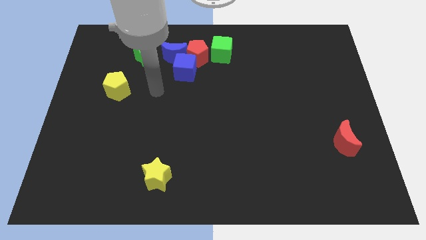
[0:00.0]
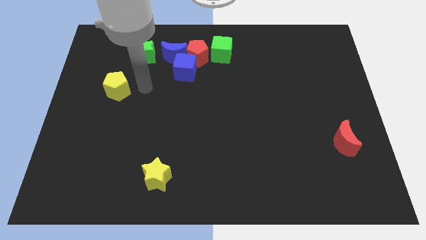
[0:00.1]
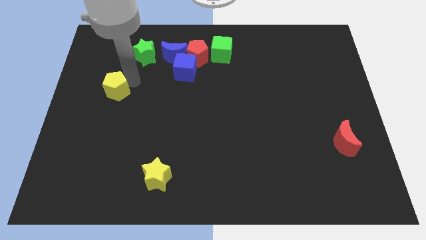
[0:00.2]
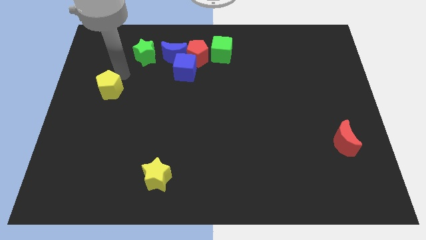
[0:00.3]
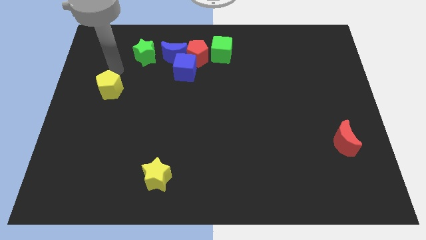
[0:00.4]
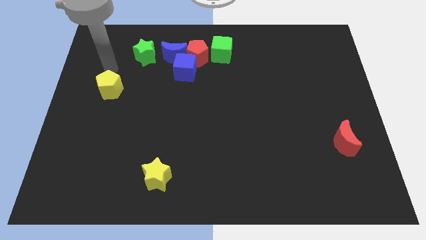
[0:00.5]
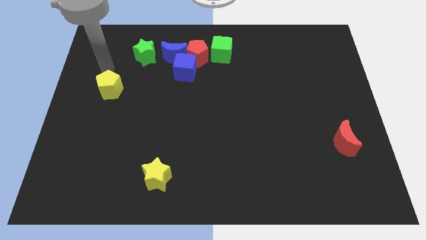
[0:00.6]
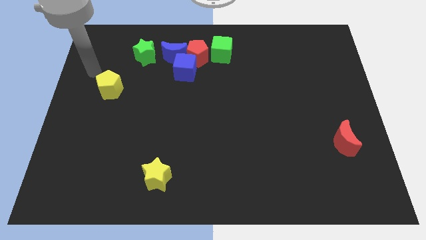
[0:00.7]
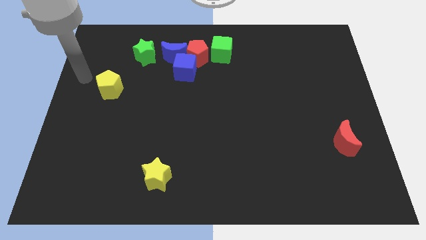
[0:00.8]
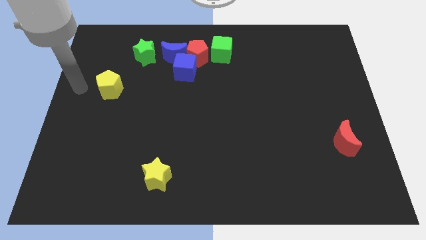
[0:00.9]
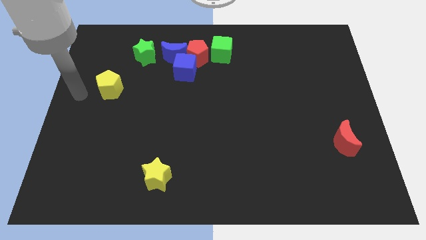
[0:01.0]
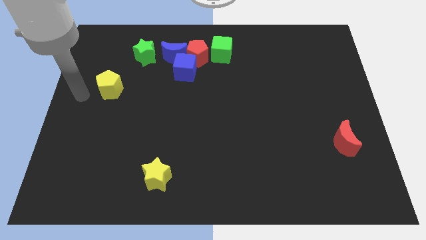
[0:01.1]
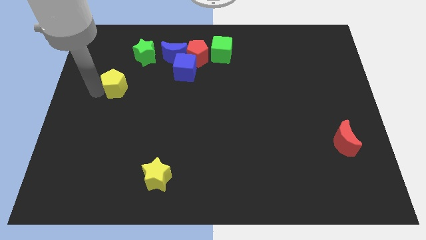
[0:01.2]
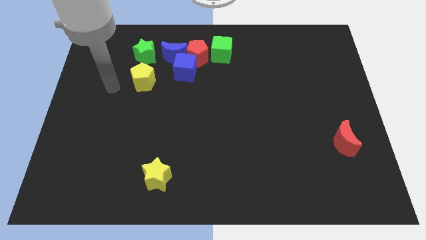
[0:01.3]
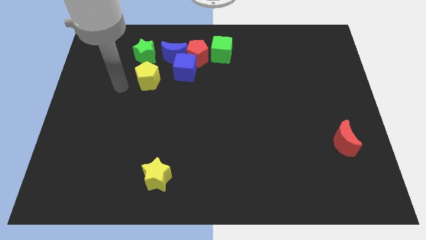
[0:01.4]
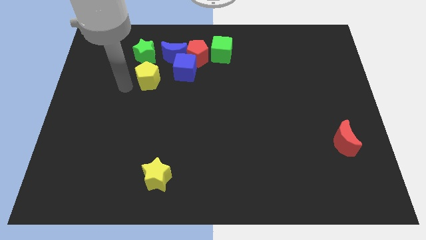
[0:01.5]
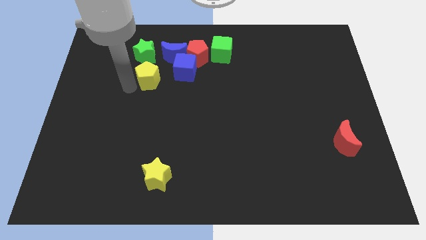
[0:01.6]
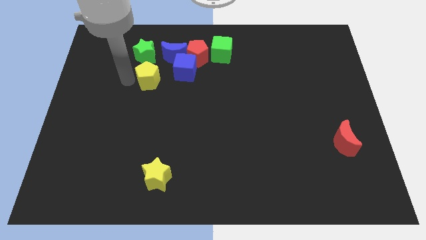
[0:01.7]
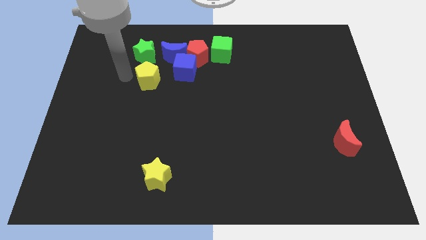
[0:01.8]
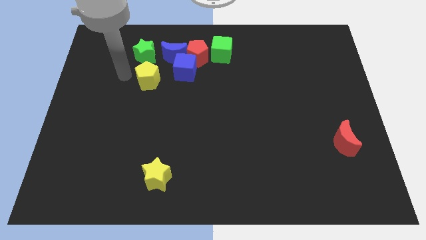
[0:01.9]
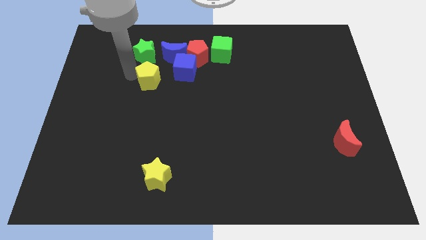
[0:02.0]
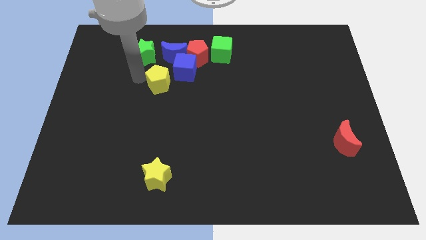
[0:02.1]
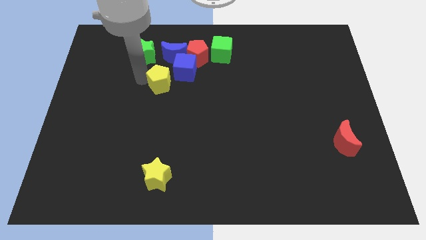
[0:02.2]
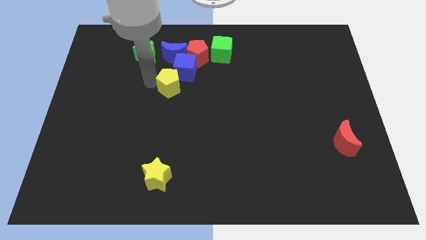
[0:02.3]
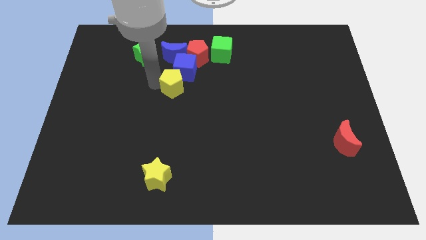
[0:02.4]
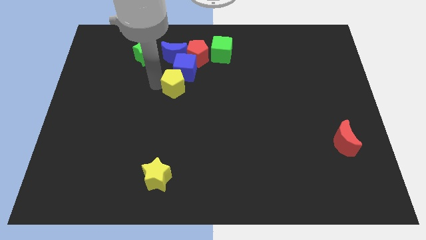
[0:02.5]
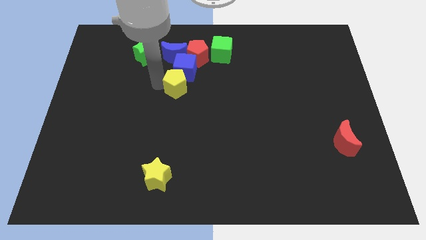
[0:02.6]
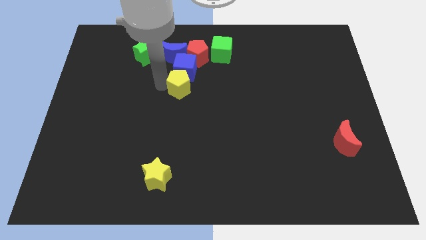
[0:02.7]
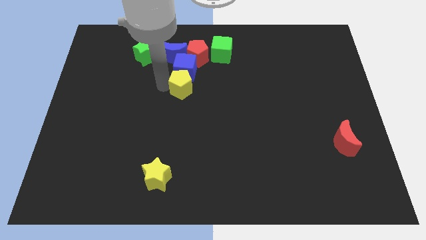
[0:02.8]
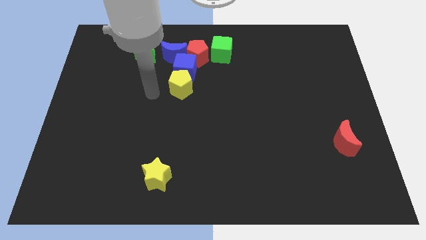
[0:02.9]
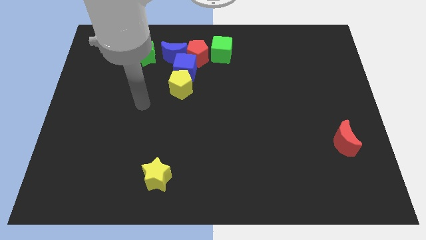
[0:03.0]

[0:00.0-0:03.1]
move the yellow pentagon below to the blue cube

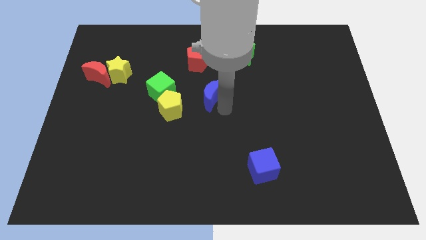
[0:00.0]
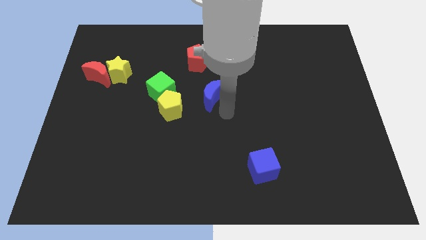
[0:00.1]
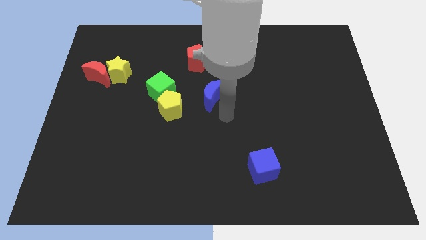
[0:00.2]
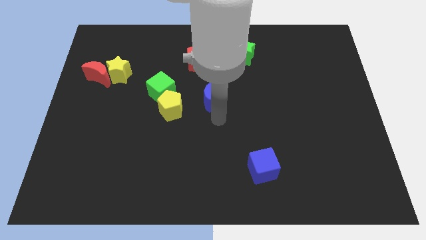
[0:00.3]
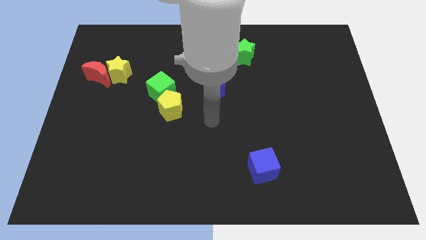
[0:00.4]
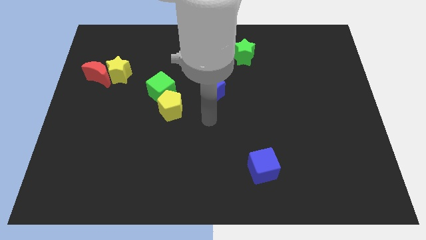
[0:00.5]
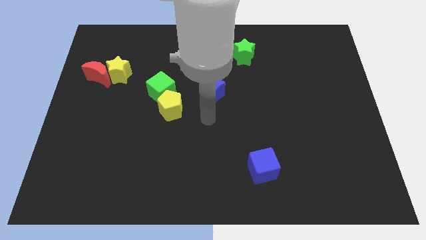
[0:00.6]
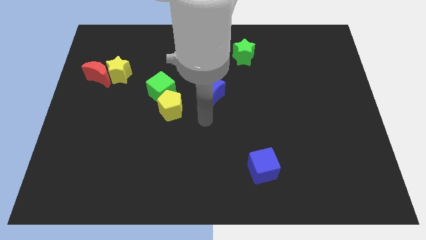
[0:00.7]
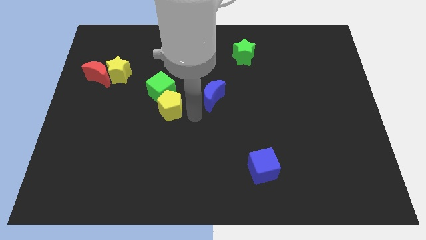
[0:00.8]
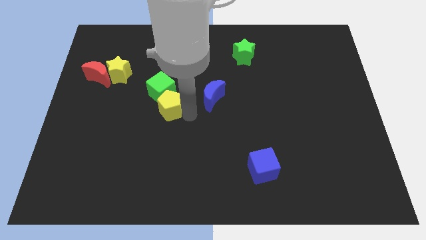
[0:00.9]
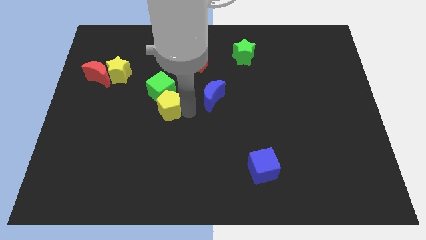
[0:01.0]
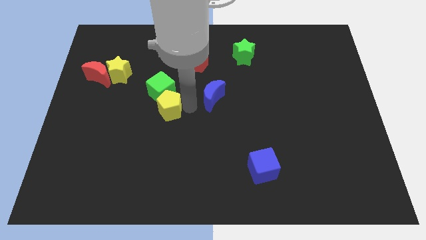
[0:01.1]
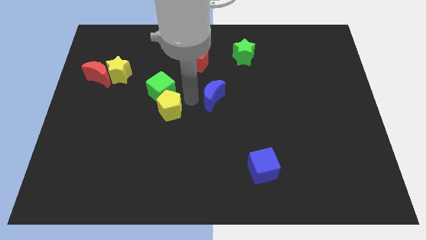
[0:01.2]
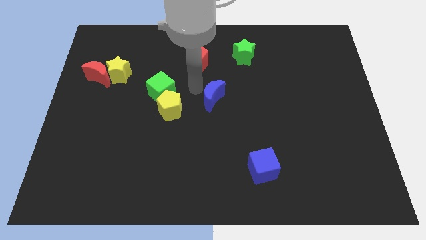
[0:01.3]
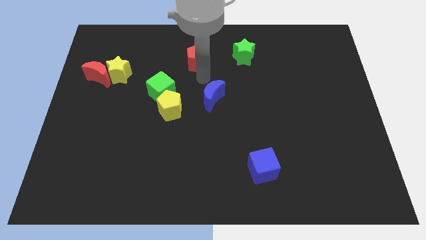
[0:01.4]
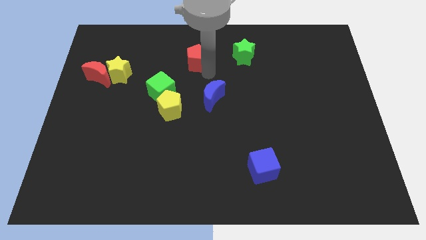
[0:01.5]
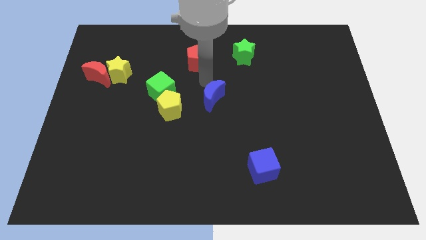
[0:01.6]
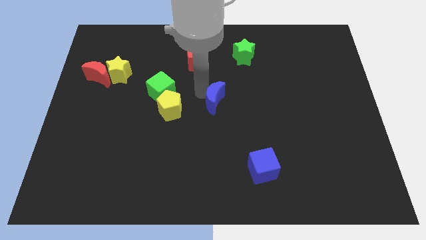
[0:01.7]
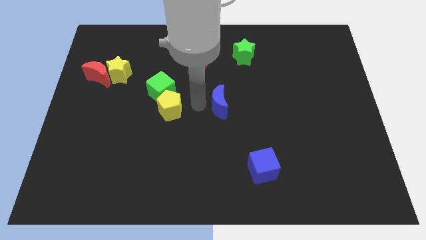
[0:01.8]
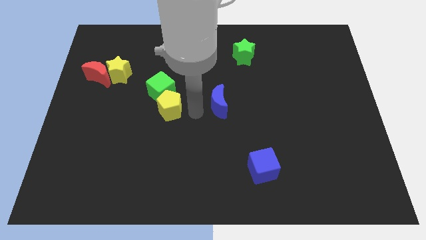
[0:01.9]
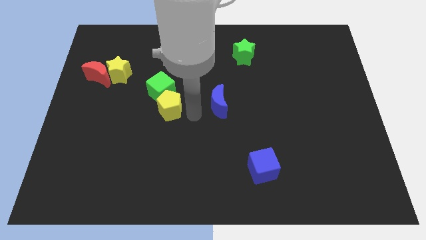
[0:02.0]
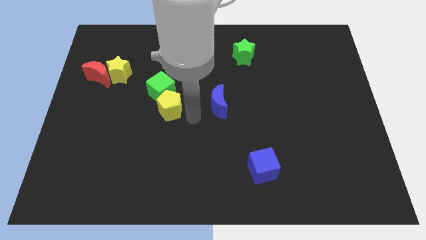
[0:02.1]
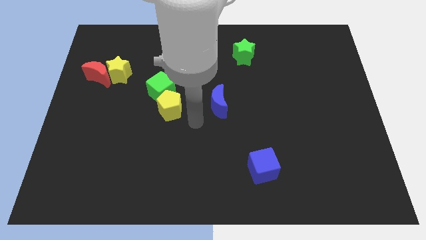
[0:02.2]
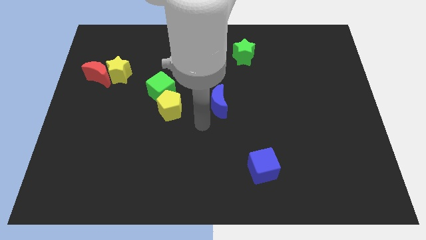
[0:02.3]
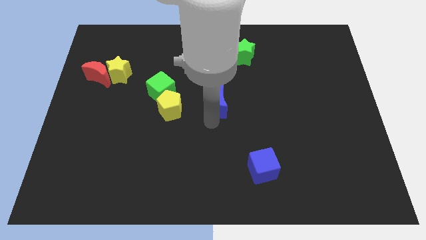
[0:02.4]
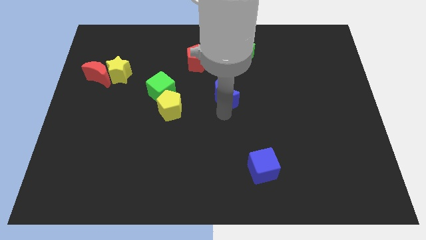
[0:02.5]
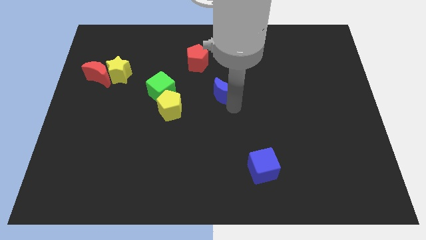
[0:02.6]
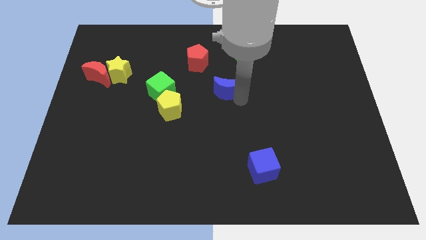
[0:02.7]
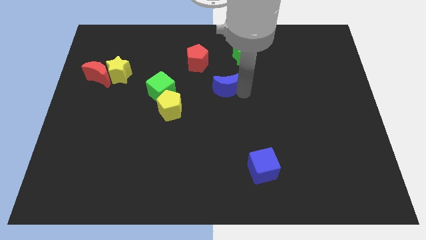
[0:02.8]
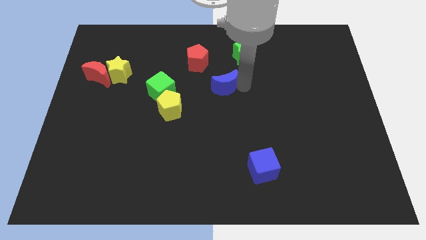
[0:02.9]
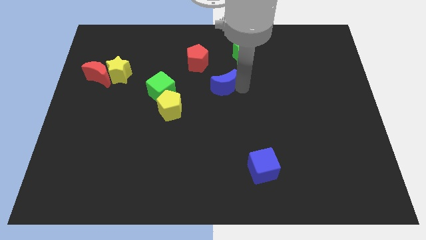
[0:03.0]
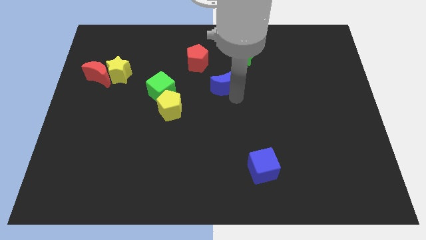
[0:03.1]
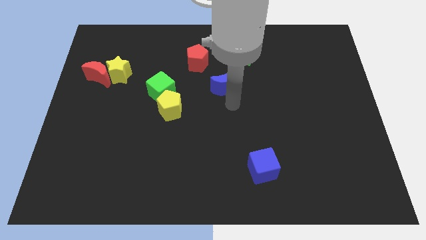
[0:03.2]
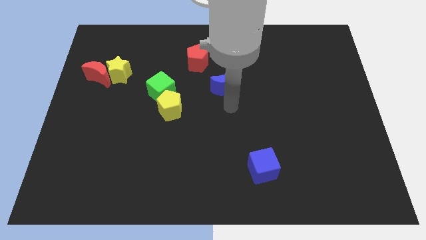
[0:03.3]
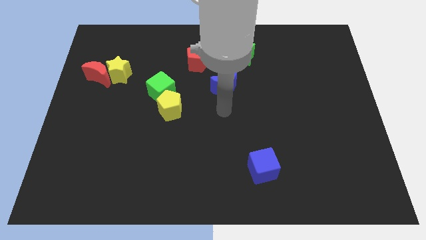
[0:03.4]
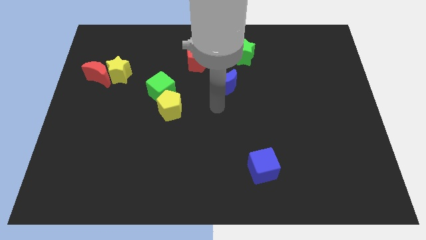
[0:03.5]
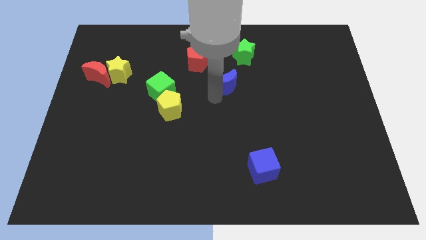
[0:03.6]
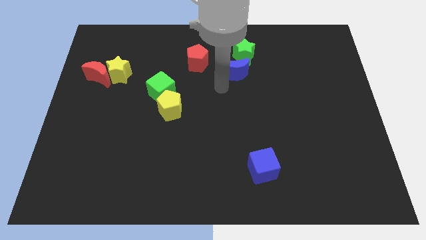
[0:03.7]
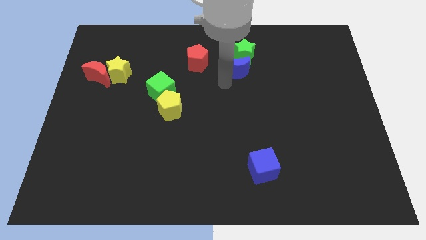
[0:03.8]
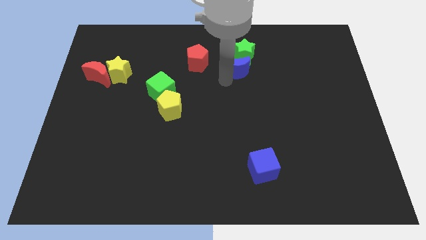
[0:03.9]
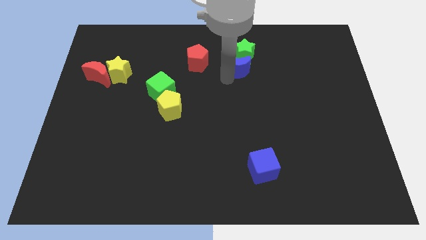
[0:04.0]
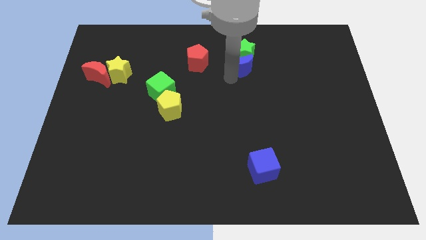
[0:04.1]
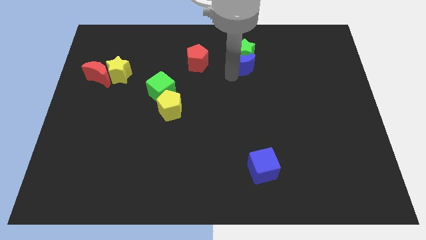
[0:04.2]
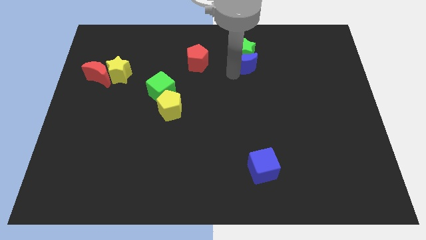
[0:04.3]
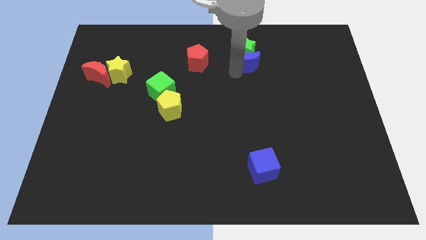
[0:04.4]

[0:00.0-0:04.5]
move the blue moon down to the green star

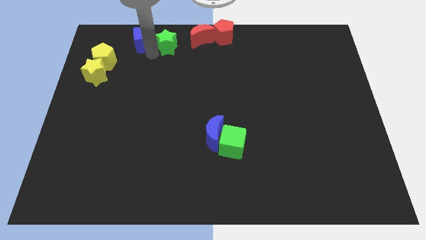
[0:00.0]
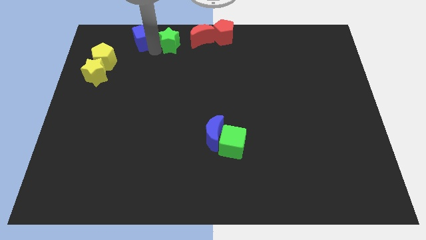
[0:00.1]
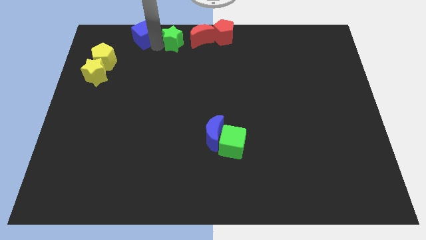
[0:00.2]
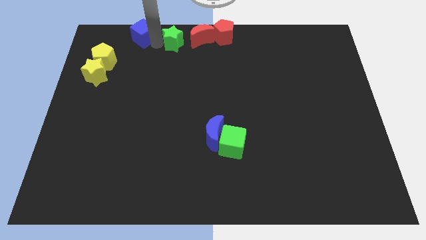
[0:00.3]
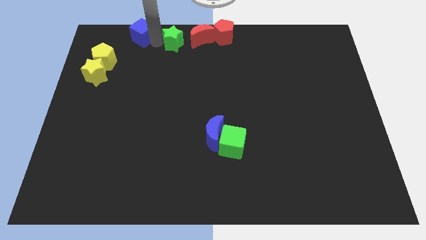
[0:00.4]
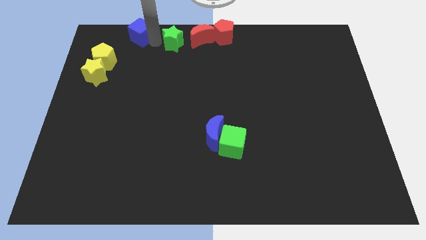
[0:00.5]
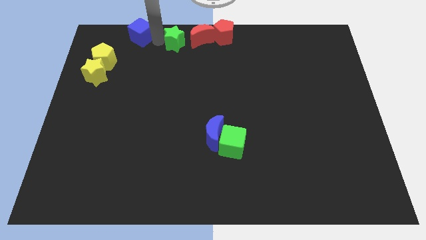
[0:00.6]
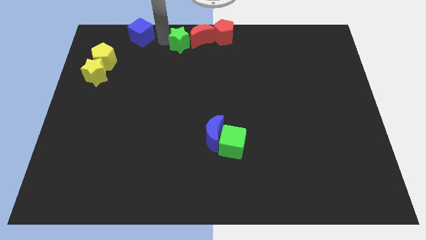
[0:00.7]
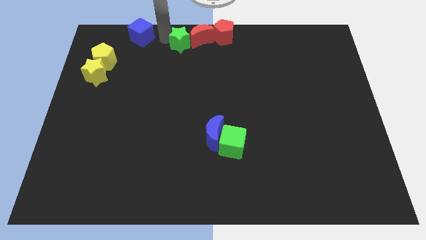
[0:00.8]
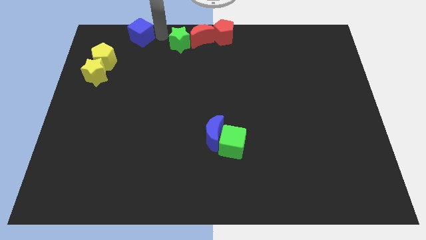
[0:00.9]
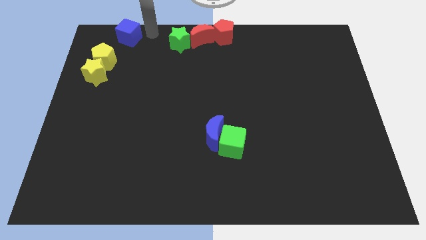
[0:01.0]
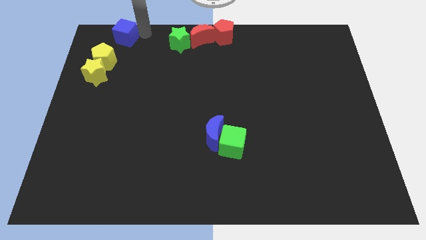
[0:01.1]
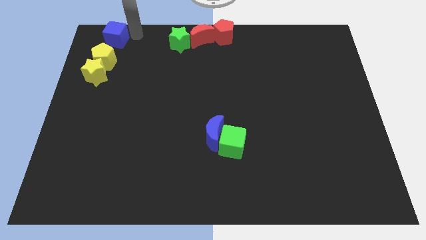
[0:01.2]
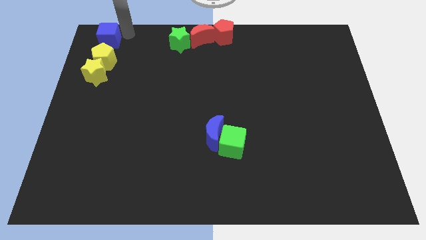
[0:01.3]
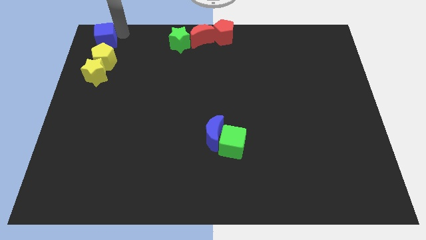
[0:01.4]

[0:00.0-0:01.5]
separate the blue cube from the green star

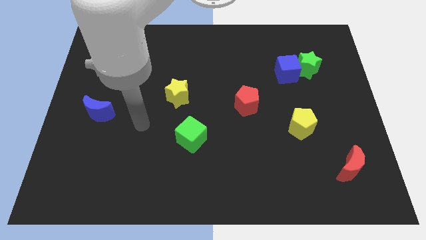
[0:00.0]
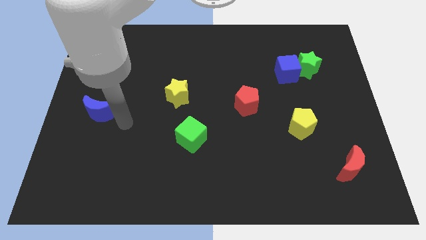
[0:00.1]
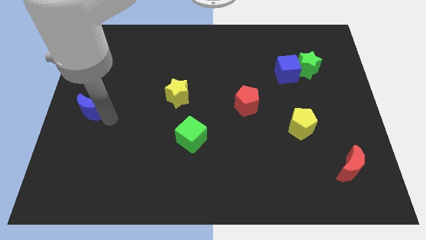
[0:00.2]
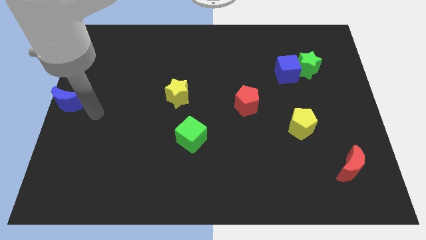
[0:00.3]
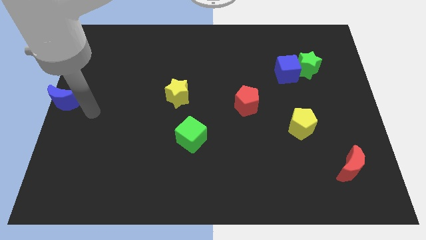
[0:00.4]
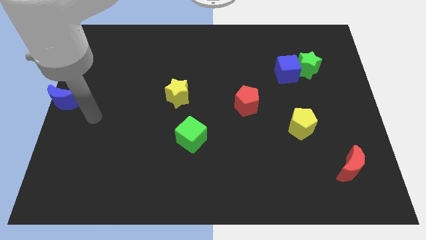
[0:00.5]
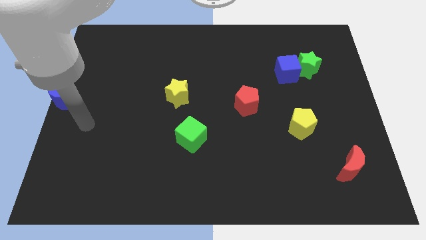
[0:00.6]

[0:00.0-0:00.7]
push the blue moon to the left side of the board
